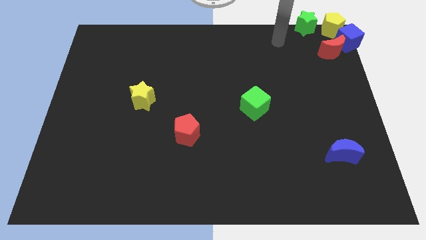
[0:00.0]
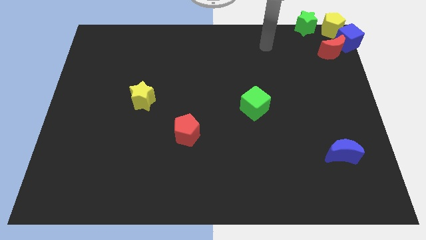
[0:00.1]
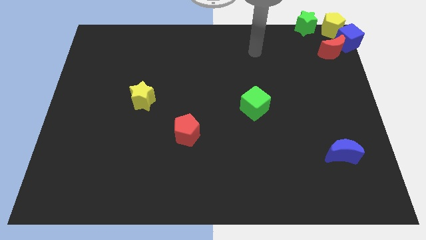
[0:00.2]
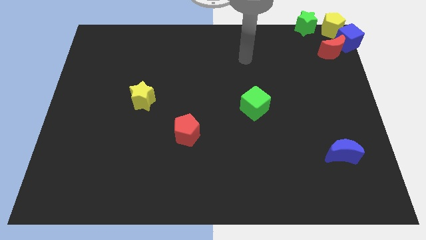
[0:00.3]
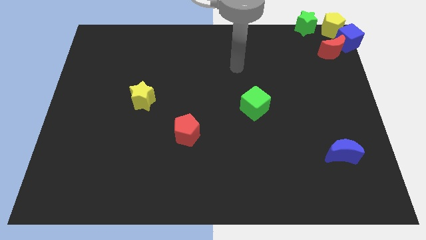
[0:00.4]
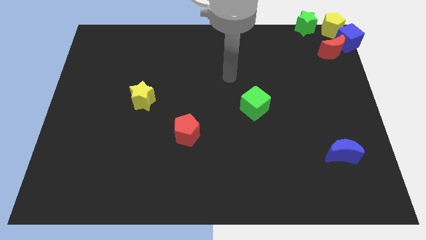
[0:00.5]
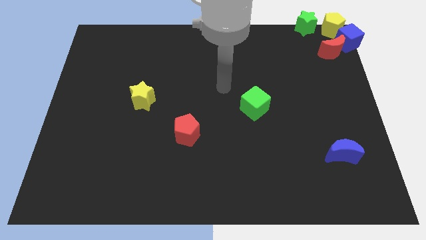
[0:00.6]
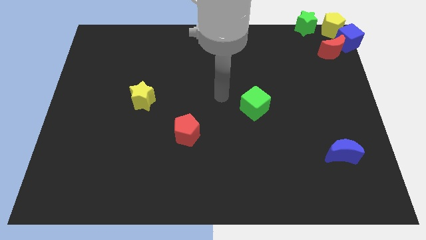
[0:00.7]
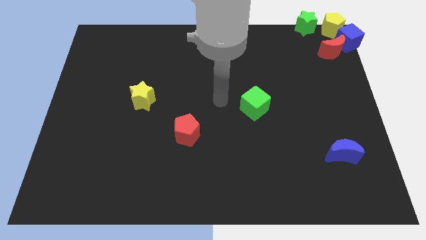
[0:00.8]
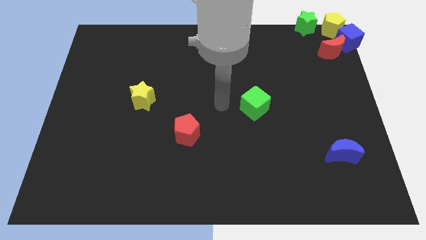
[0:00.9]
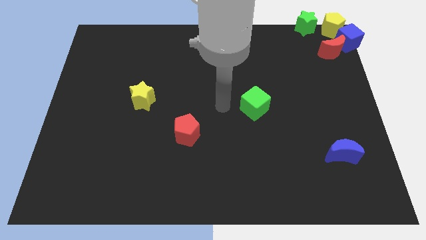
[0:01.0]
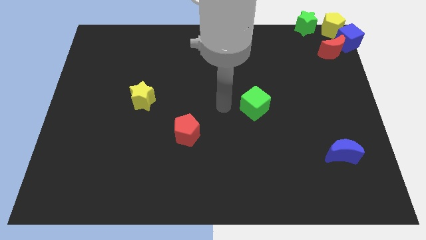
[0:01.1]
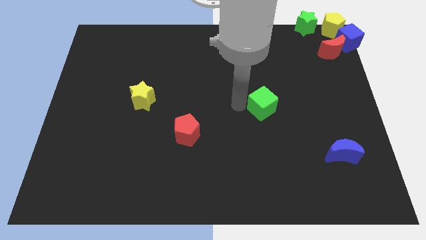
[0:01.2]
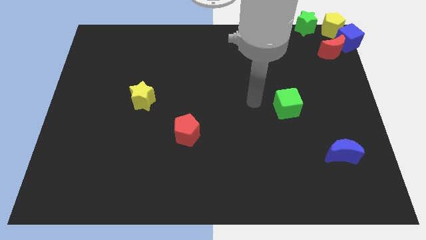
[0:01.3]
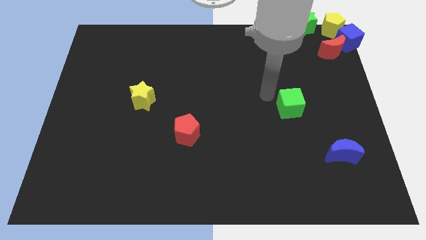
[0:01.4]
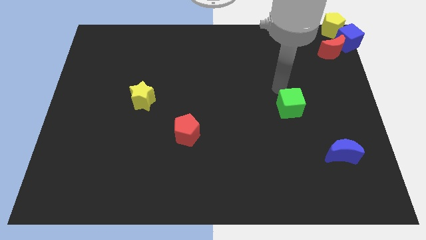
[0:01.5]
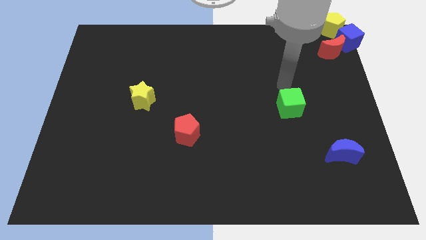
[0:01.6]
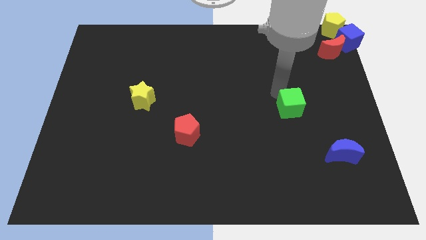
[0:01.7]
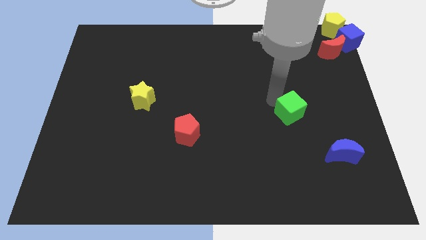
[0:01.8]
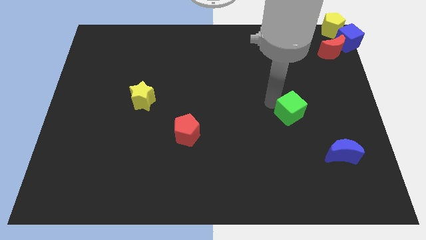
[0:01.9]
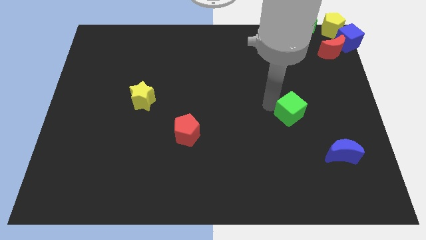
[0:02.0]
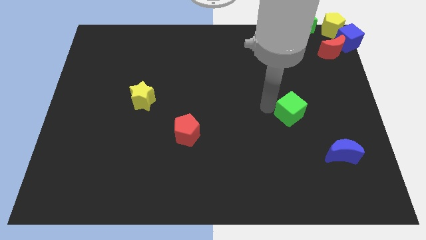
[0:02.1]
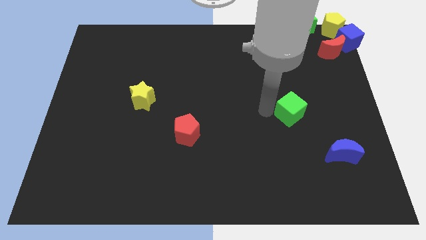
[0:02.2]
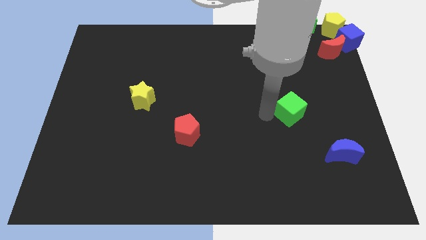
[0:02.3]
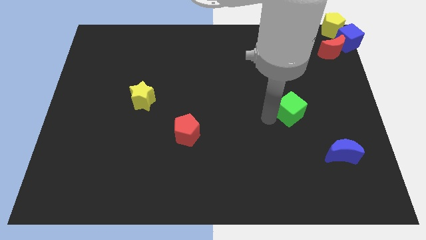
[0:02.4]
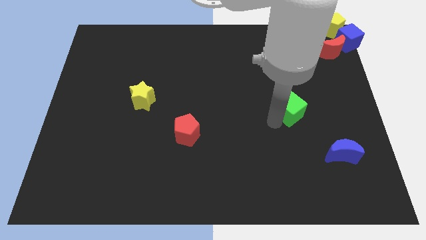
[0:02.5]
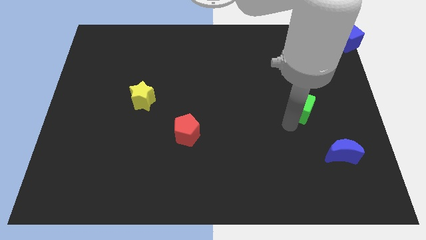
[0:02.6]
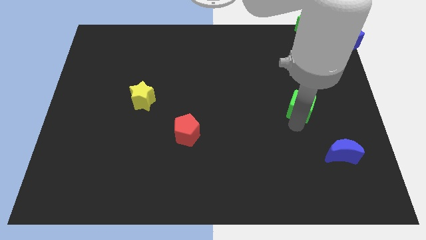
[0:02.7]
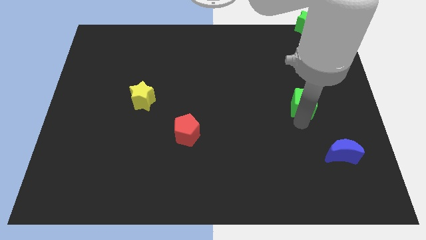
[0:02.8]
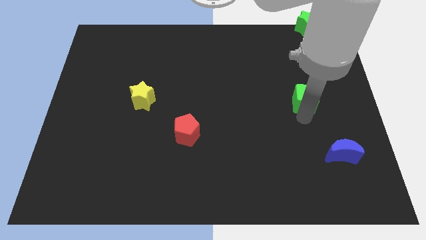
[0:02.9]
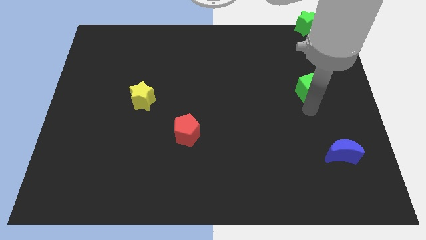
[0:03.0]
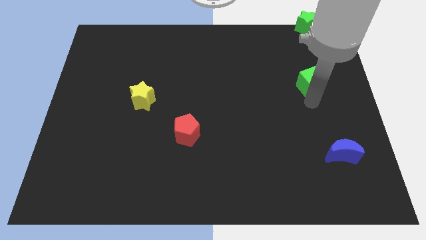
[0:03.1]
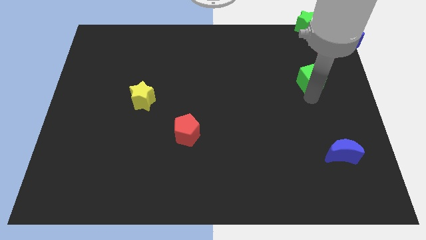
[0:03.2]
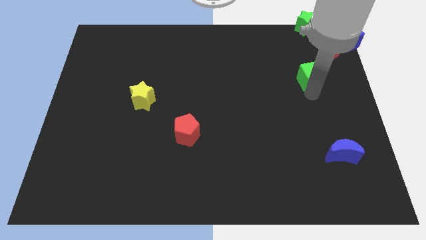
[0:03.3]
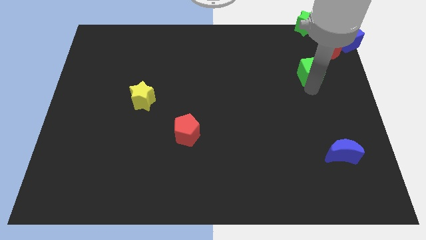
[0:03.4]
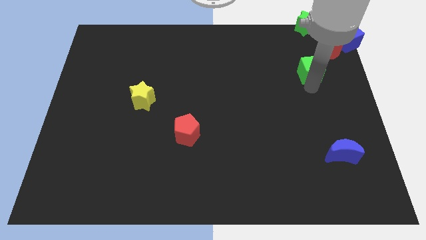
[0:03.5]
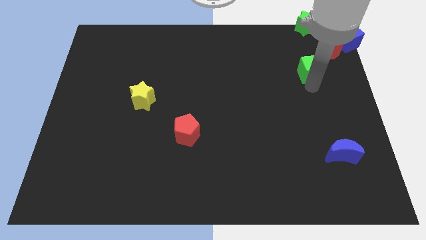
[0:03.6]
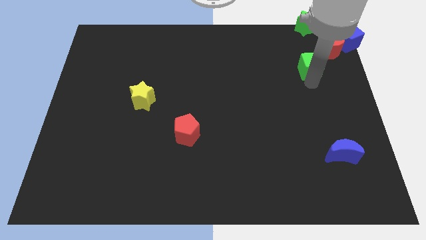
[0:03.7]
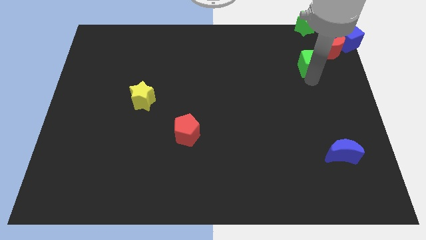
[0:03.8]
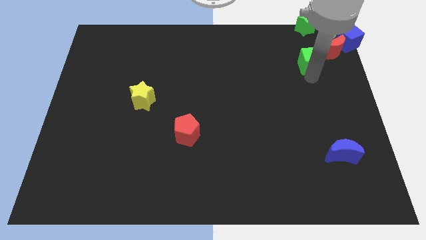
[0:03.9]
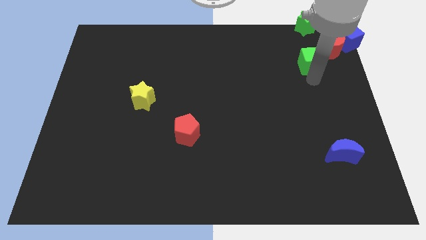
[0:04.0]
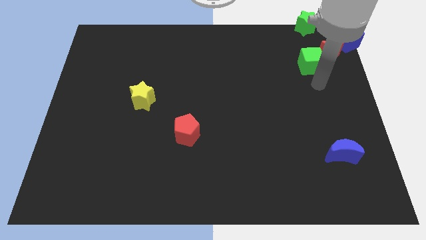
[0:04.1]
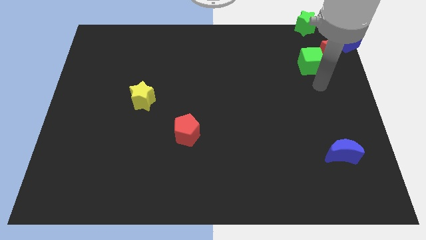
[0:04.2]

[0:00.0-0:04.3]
drag the green cube towards the top side of the board

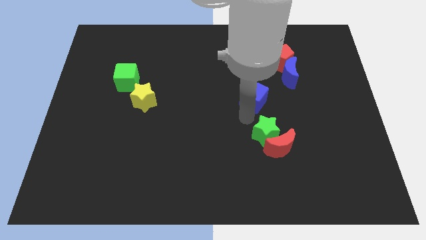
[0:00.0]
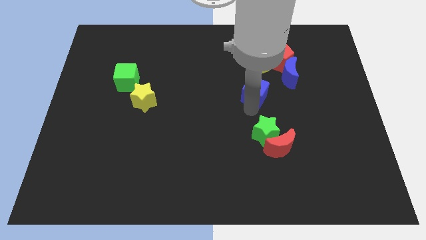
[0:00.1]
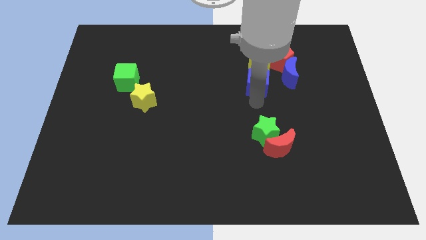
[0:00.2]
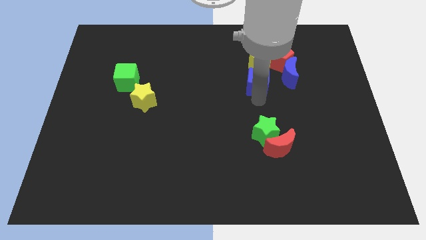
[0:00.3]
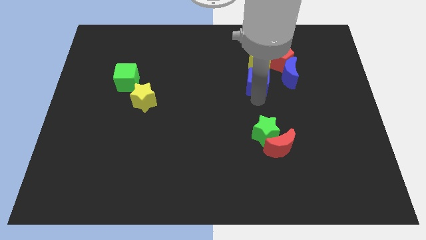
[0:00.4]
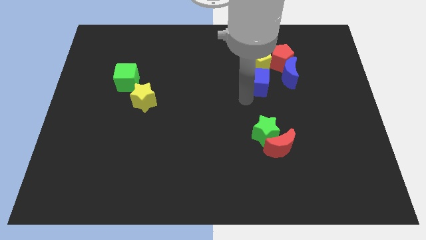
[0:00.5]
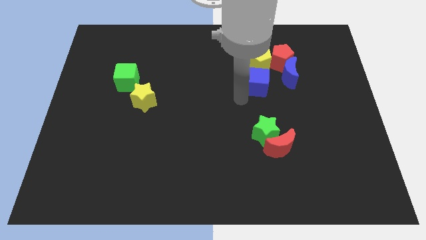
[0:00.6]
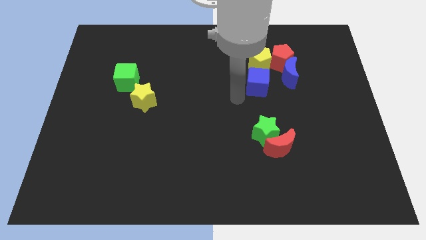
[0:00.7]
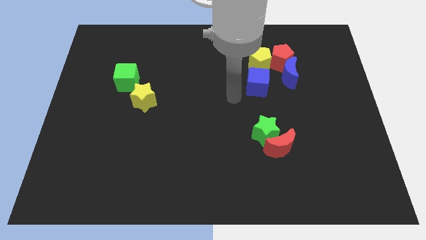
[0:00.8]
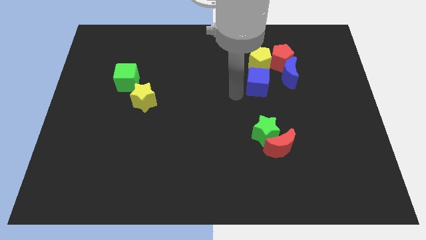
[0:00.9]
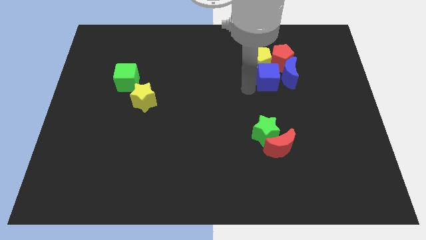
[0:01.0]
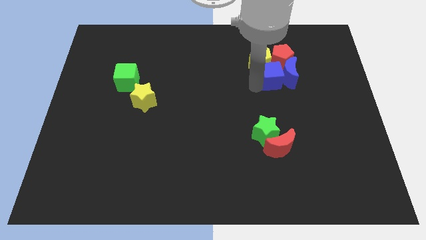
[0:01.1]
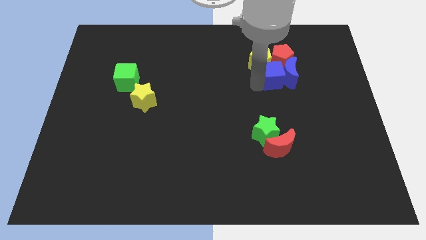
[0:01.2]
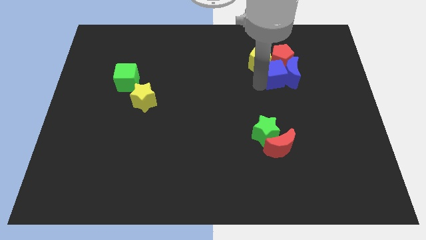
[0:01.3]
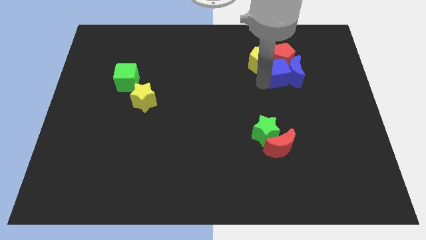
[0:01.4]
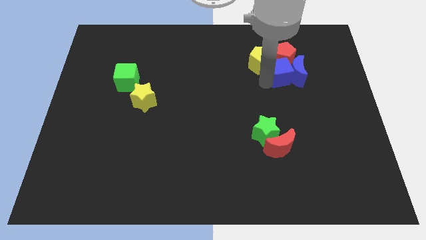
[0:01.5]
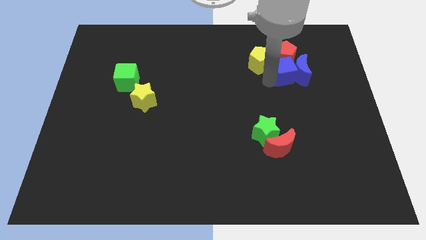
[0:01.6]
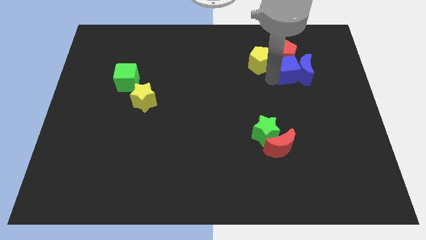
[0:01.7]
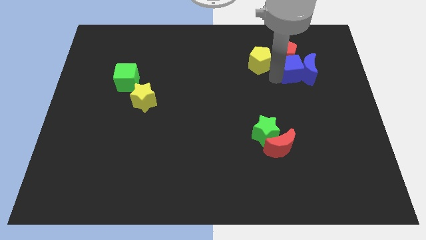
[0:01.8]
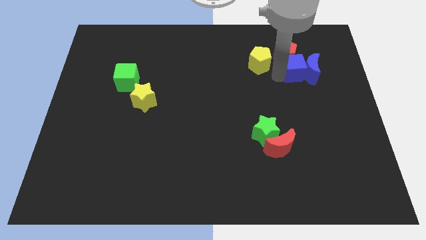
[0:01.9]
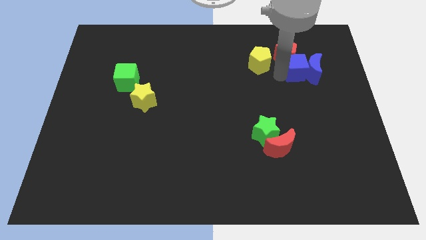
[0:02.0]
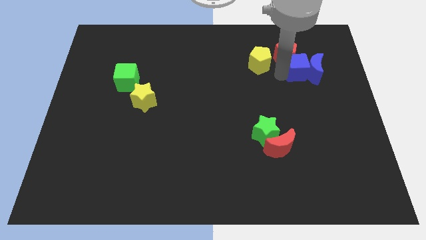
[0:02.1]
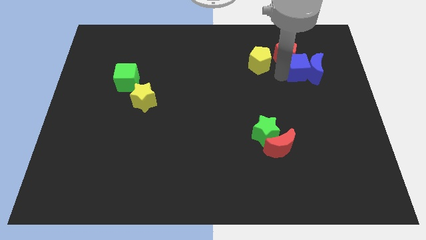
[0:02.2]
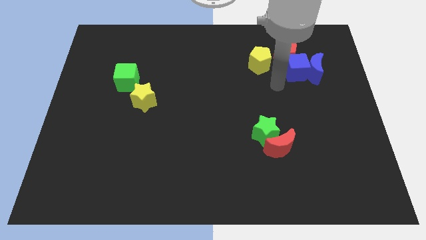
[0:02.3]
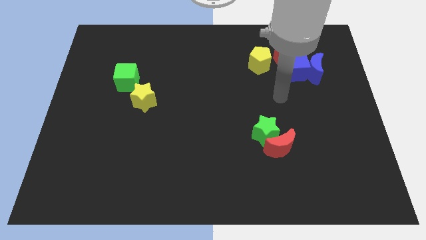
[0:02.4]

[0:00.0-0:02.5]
push the blue square into the blue moon

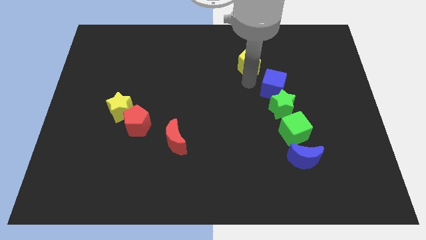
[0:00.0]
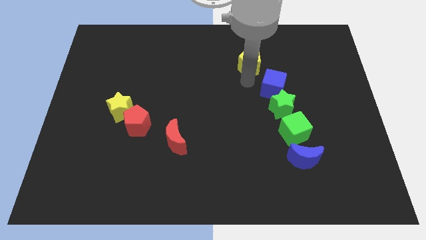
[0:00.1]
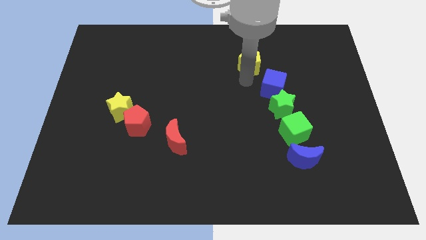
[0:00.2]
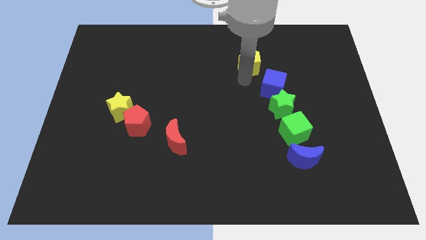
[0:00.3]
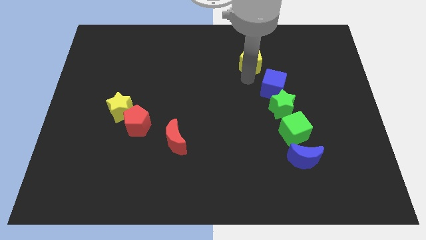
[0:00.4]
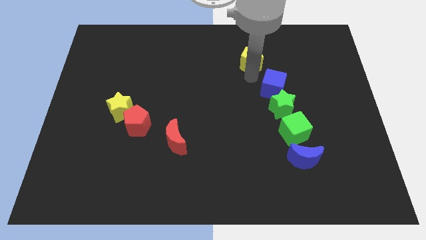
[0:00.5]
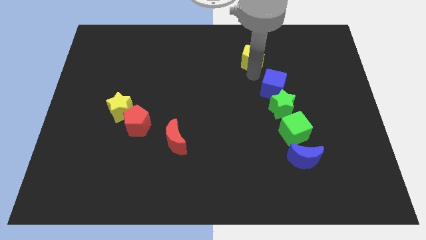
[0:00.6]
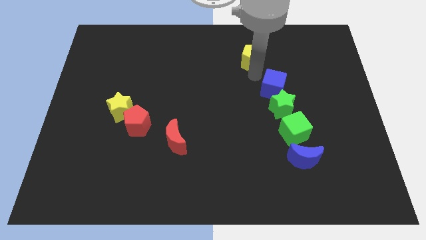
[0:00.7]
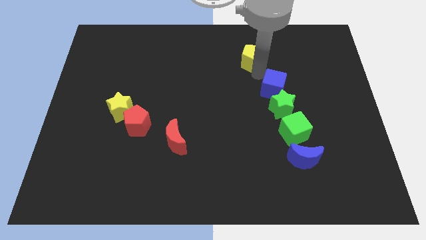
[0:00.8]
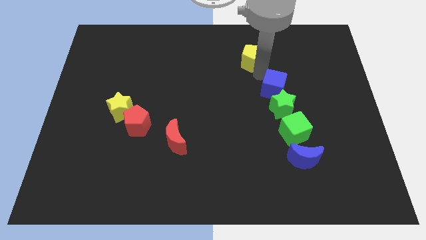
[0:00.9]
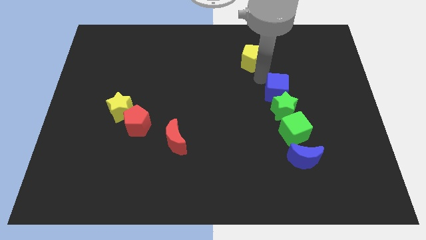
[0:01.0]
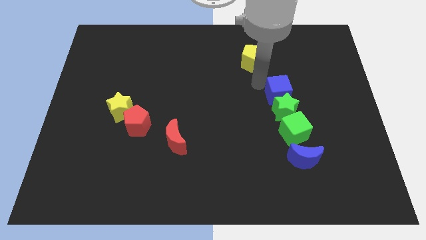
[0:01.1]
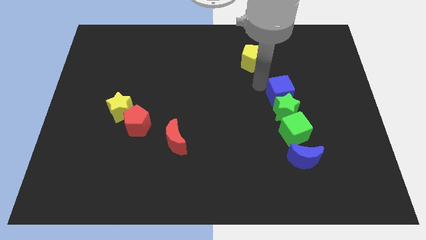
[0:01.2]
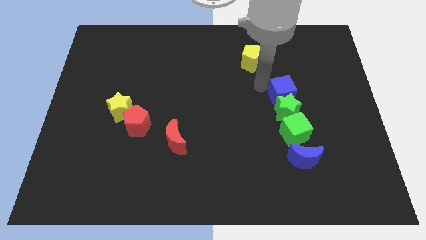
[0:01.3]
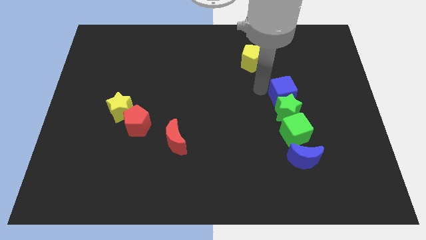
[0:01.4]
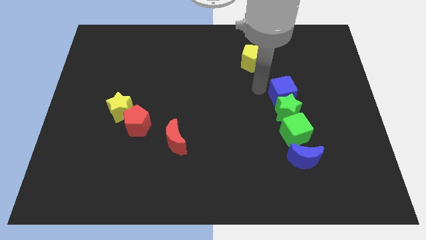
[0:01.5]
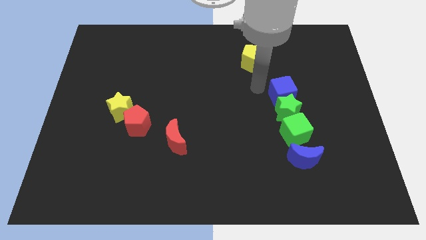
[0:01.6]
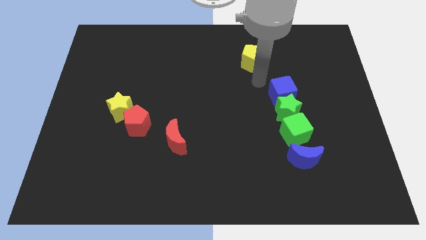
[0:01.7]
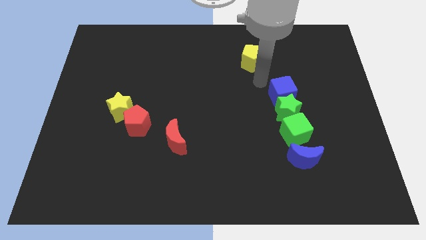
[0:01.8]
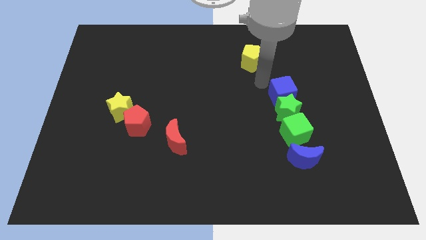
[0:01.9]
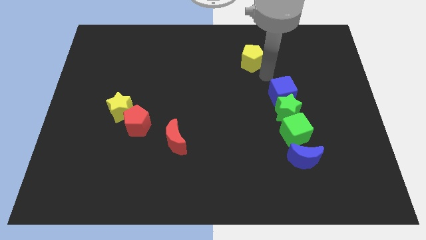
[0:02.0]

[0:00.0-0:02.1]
place your hand in between yellow pentagon and blue cube

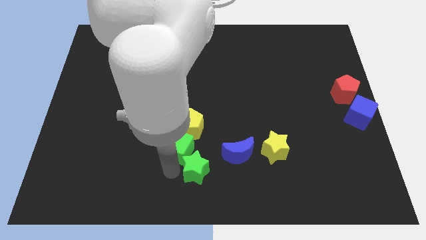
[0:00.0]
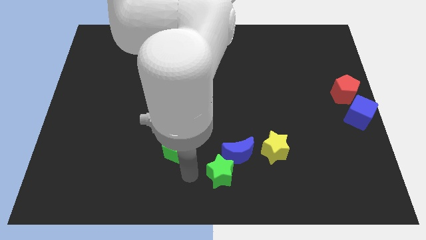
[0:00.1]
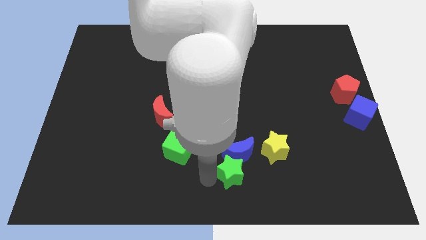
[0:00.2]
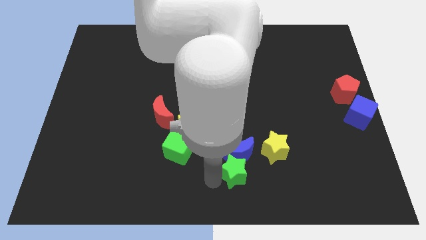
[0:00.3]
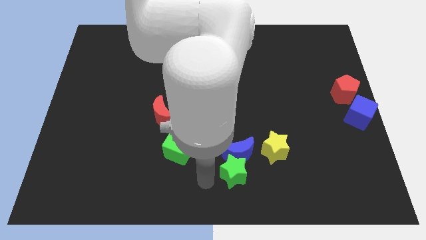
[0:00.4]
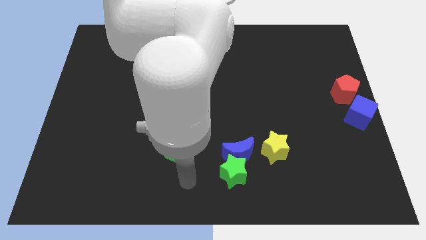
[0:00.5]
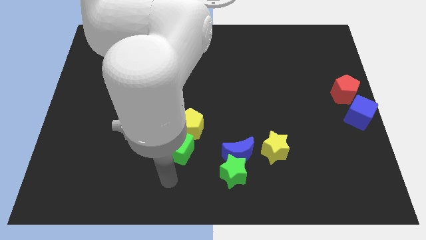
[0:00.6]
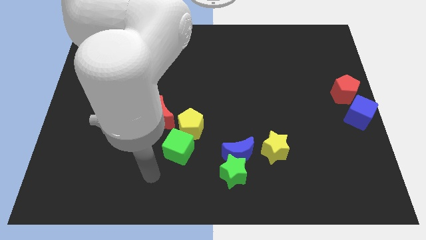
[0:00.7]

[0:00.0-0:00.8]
push green star to the bottom side of the blue moon
